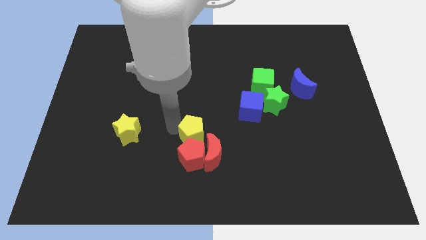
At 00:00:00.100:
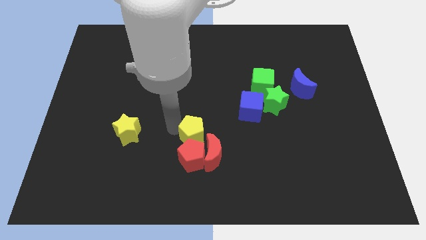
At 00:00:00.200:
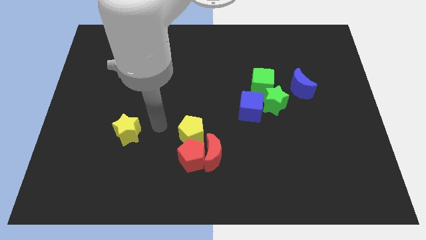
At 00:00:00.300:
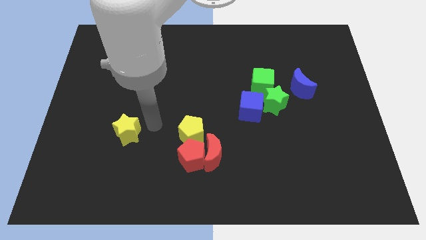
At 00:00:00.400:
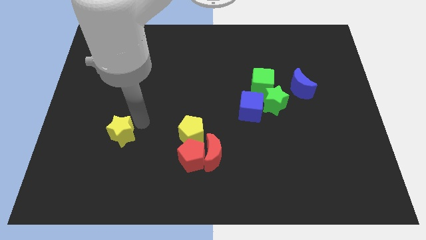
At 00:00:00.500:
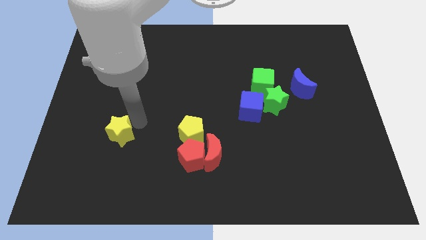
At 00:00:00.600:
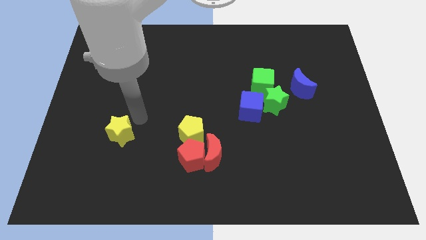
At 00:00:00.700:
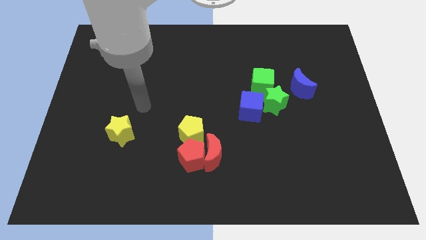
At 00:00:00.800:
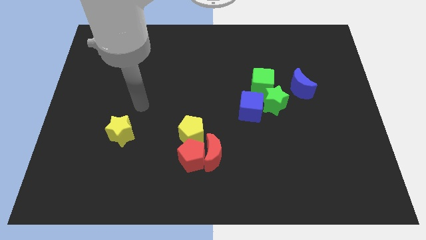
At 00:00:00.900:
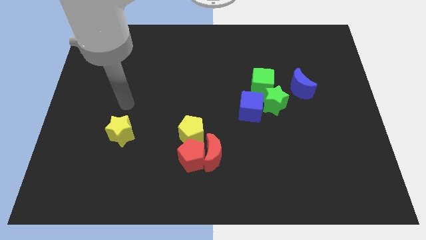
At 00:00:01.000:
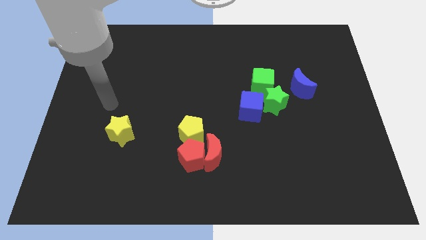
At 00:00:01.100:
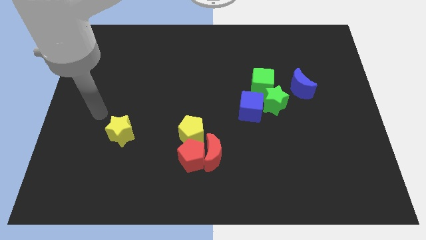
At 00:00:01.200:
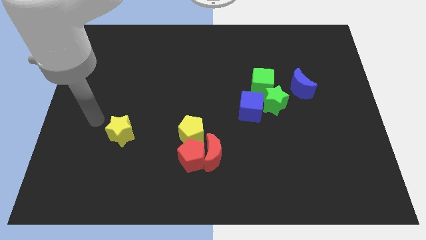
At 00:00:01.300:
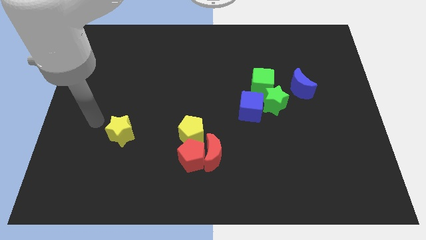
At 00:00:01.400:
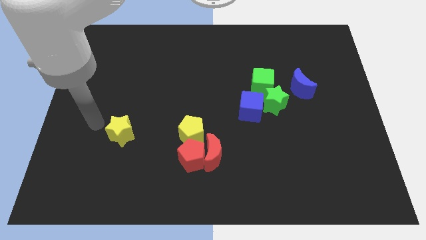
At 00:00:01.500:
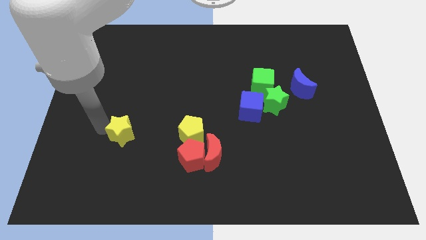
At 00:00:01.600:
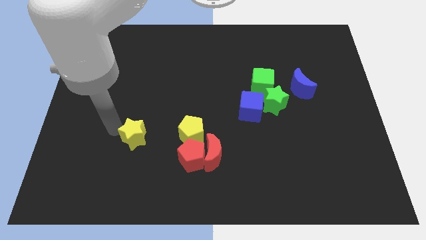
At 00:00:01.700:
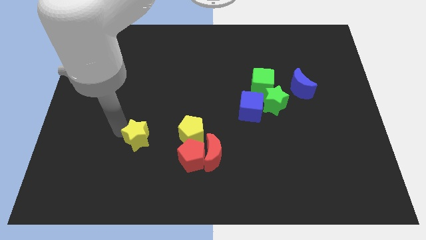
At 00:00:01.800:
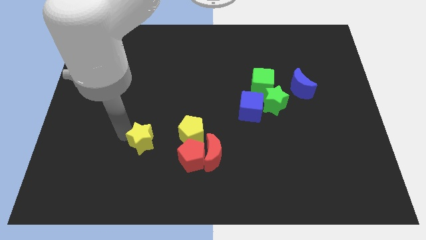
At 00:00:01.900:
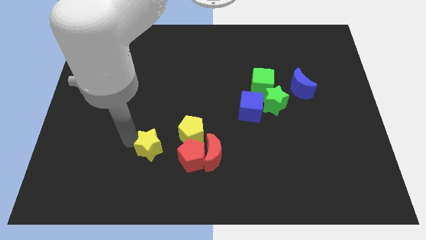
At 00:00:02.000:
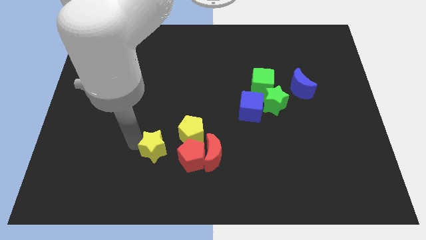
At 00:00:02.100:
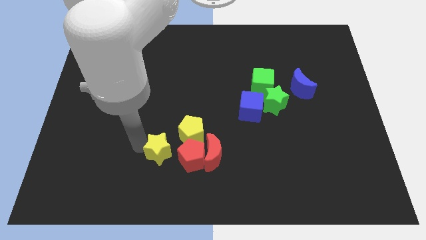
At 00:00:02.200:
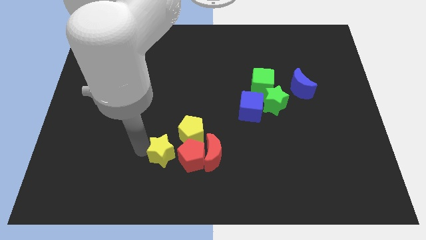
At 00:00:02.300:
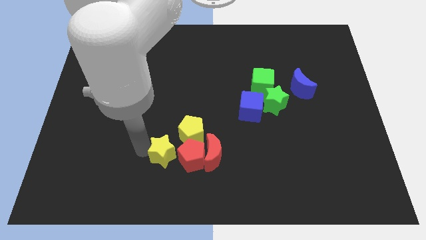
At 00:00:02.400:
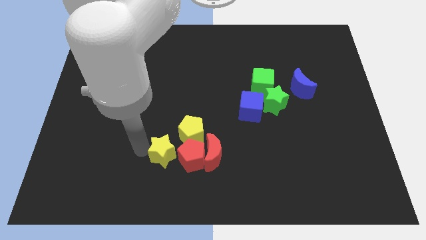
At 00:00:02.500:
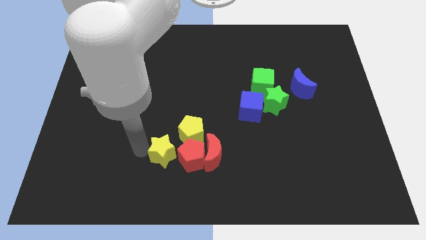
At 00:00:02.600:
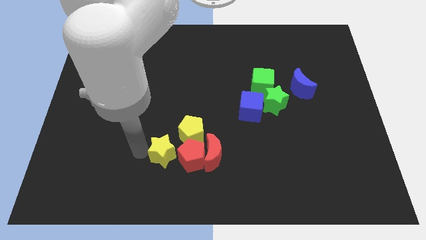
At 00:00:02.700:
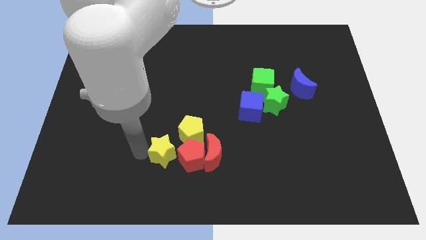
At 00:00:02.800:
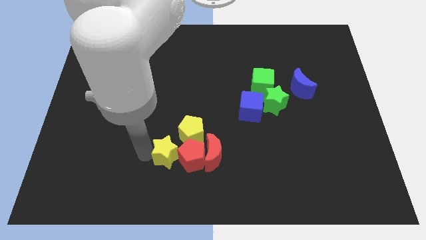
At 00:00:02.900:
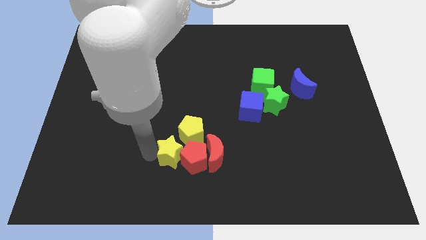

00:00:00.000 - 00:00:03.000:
place the yellow star left to the red pentagon

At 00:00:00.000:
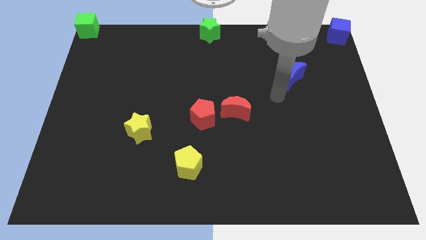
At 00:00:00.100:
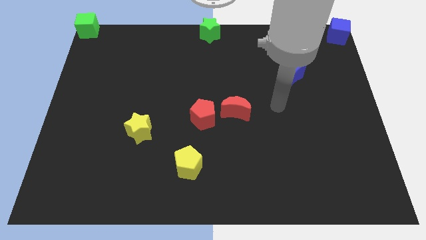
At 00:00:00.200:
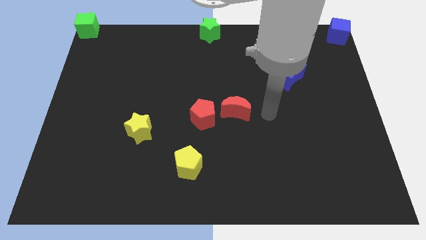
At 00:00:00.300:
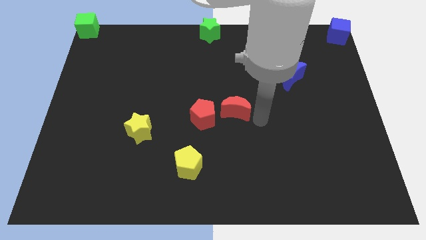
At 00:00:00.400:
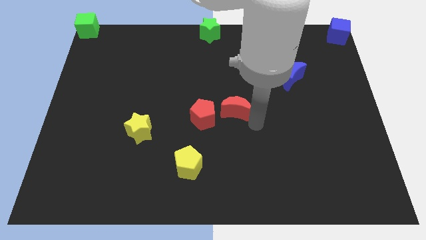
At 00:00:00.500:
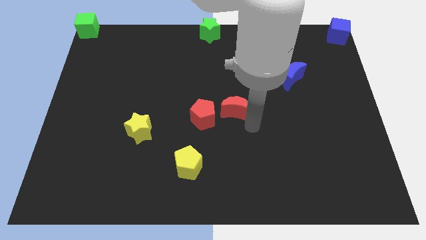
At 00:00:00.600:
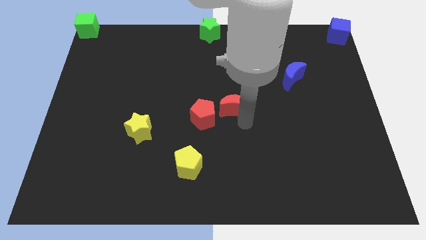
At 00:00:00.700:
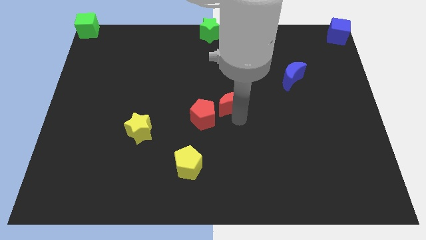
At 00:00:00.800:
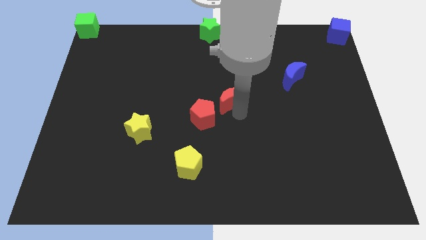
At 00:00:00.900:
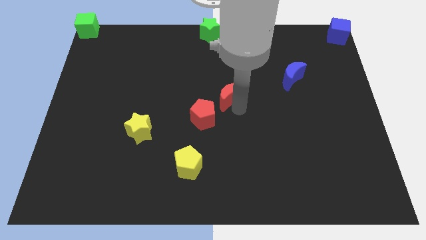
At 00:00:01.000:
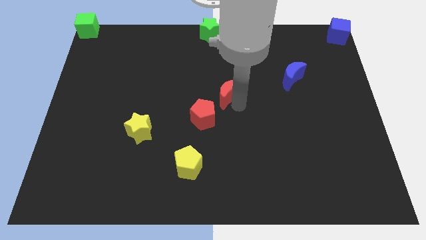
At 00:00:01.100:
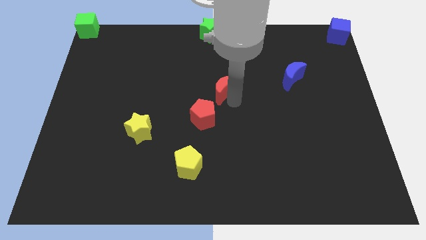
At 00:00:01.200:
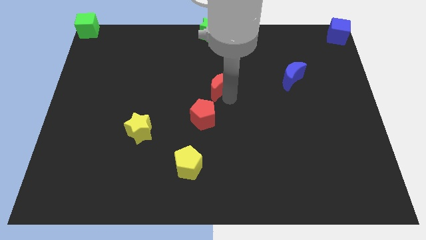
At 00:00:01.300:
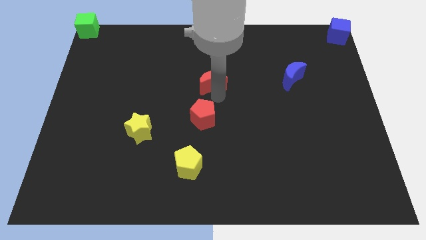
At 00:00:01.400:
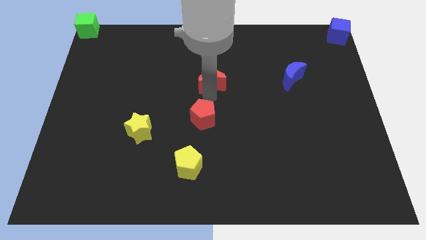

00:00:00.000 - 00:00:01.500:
move the red crescent to the top side of the red pentagon

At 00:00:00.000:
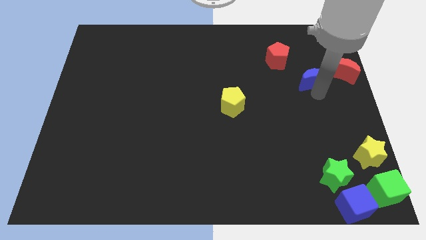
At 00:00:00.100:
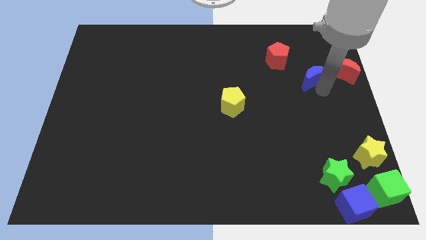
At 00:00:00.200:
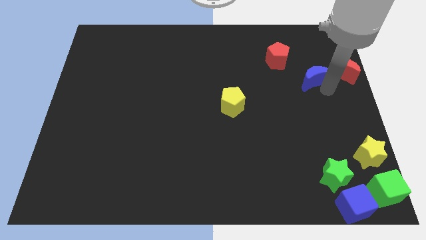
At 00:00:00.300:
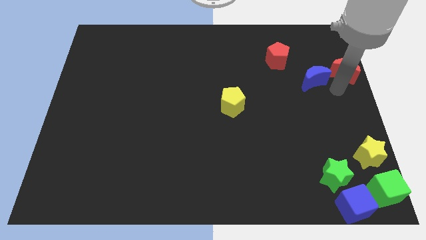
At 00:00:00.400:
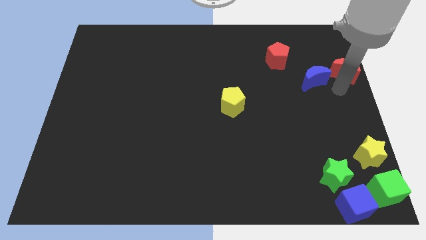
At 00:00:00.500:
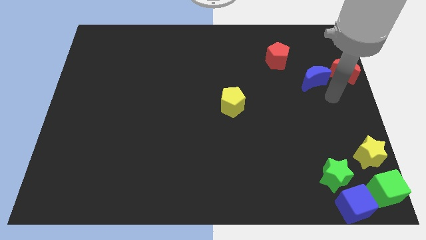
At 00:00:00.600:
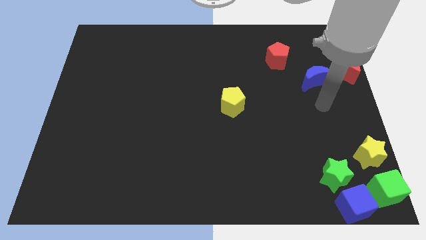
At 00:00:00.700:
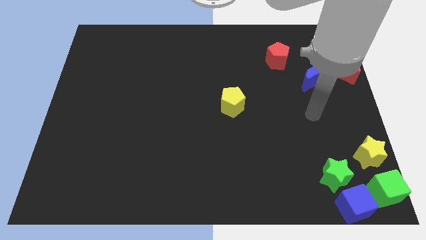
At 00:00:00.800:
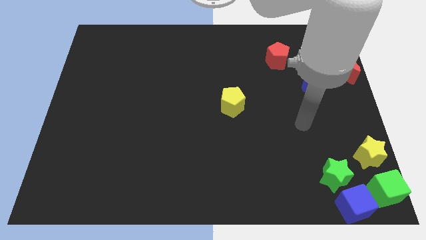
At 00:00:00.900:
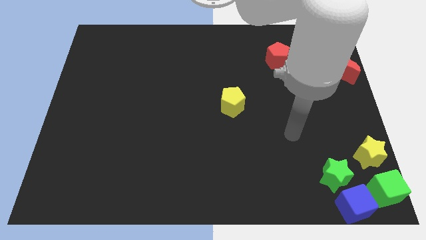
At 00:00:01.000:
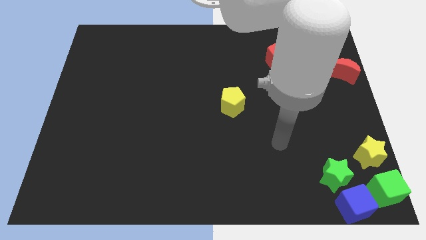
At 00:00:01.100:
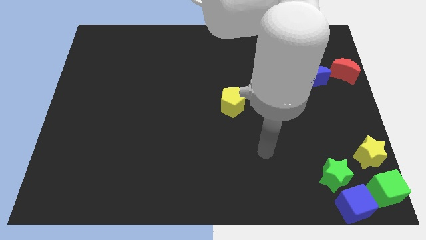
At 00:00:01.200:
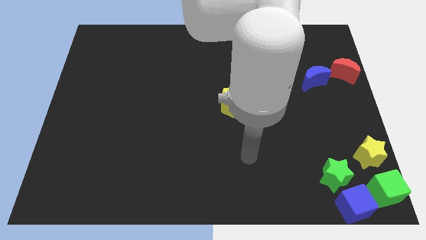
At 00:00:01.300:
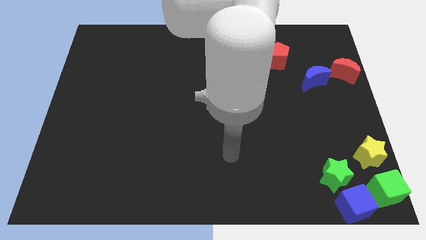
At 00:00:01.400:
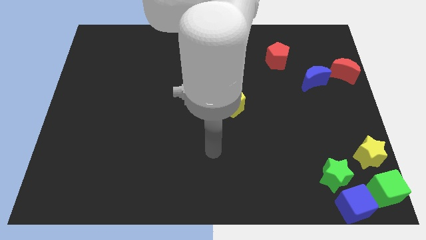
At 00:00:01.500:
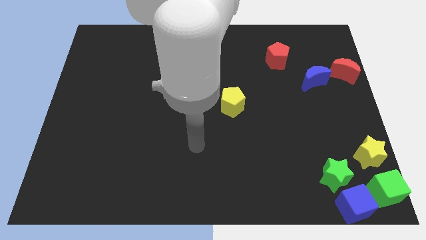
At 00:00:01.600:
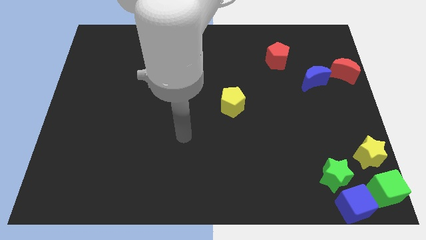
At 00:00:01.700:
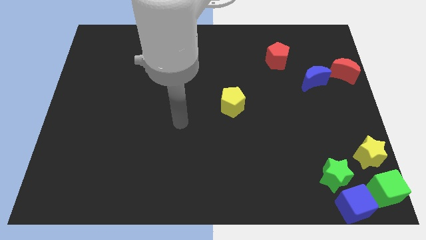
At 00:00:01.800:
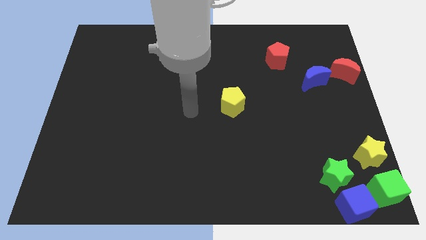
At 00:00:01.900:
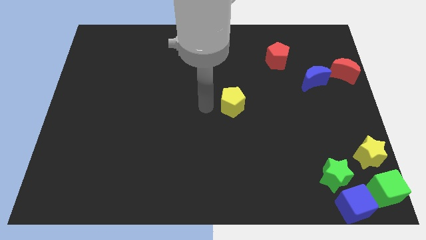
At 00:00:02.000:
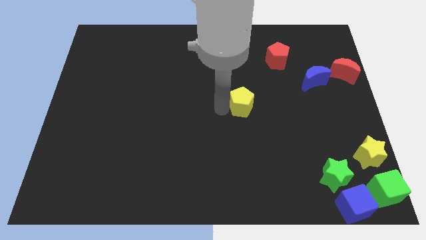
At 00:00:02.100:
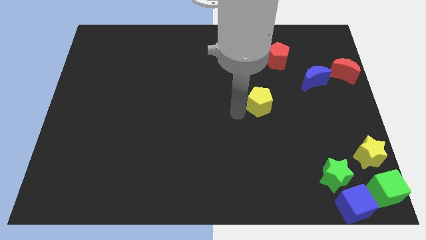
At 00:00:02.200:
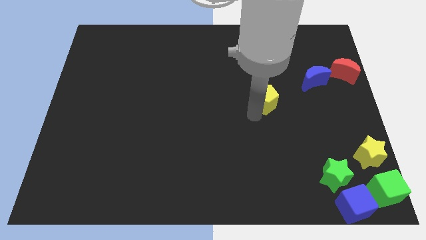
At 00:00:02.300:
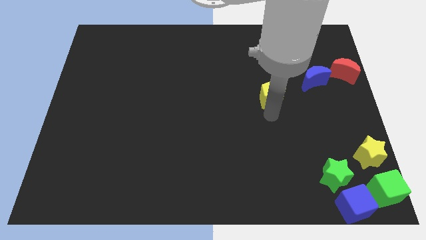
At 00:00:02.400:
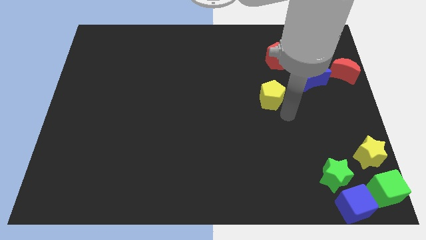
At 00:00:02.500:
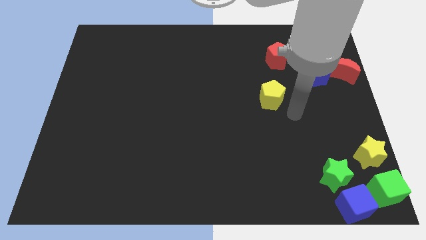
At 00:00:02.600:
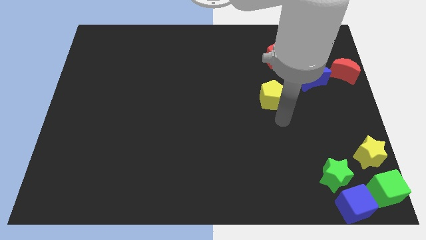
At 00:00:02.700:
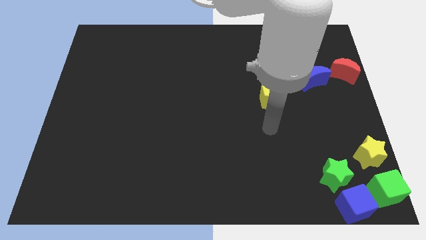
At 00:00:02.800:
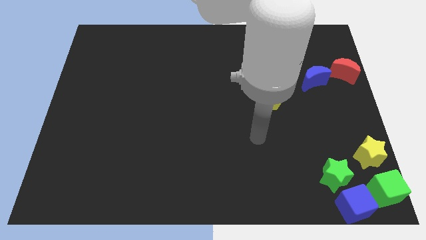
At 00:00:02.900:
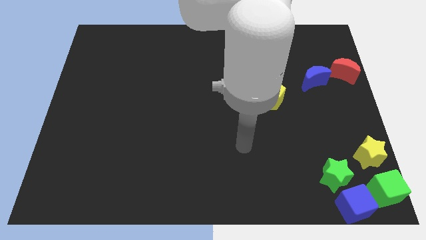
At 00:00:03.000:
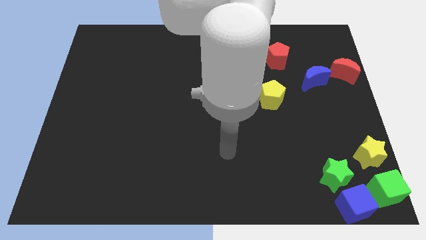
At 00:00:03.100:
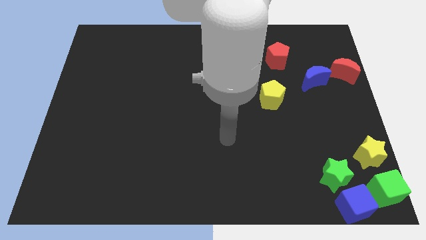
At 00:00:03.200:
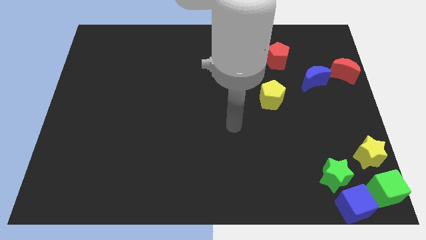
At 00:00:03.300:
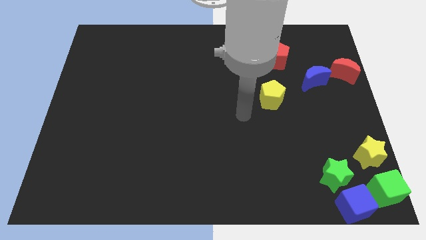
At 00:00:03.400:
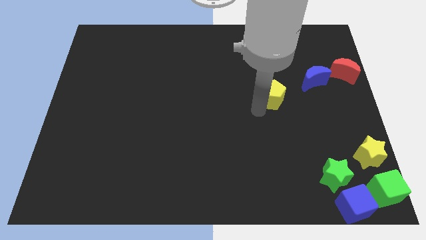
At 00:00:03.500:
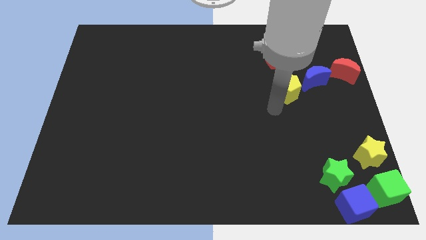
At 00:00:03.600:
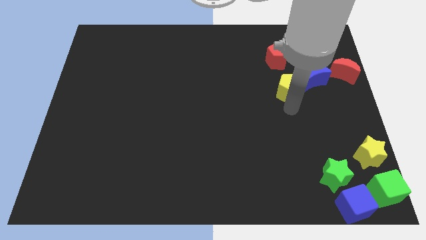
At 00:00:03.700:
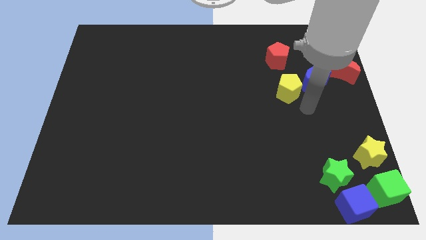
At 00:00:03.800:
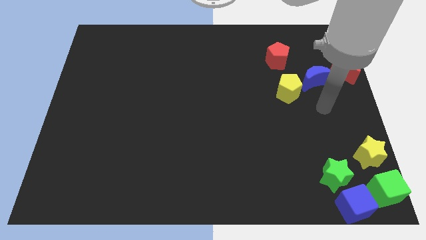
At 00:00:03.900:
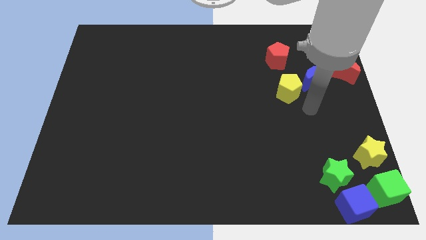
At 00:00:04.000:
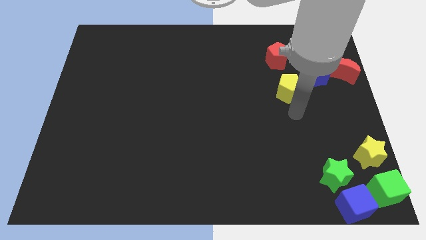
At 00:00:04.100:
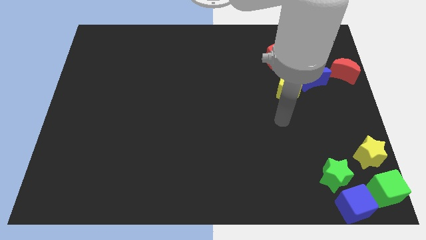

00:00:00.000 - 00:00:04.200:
drag the yellow pentagon left of the blue moon
